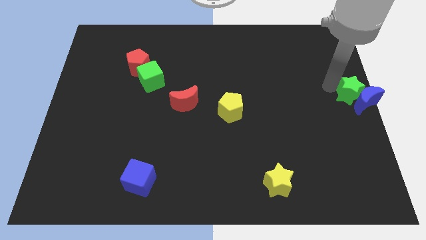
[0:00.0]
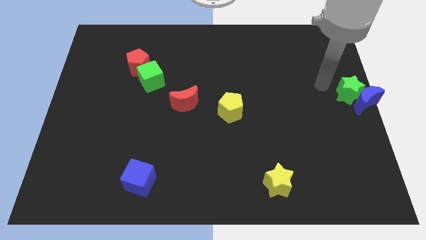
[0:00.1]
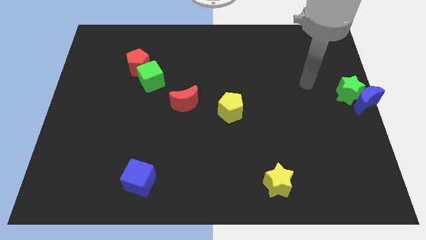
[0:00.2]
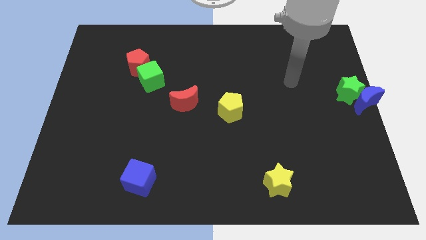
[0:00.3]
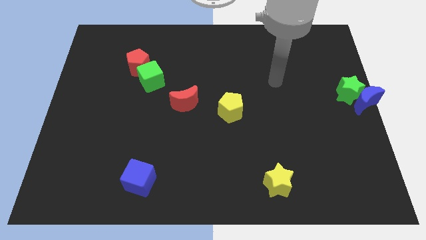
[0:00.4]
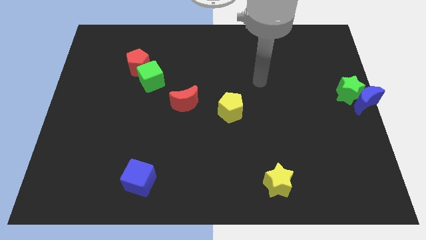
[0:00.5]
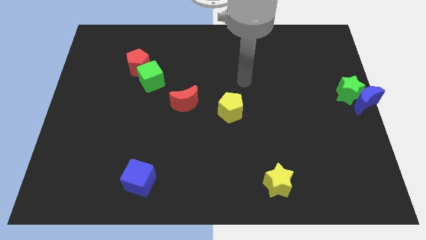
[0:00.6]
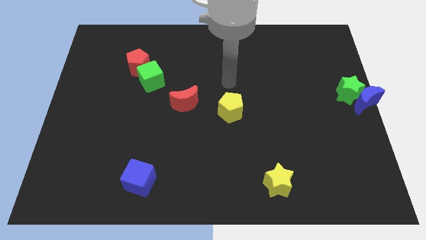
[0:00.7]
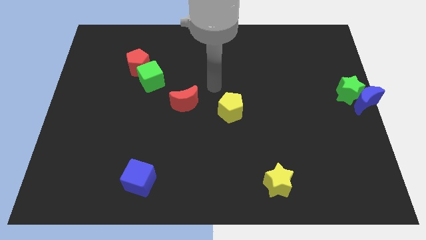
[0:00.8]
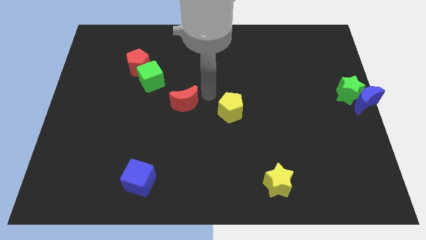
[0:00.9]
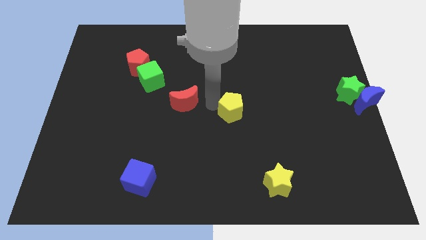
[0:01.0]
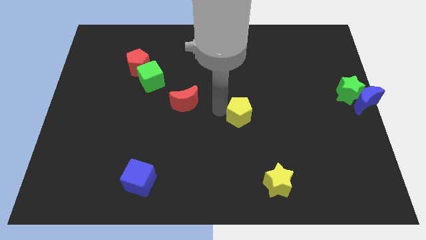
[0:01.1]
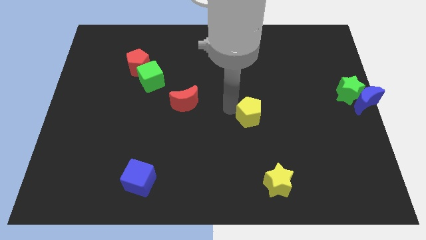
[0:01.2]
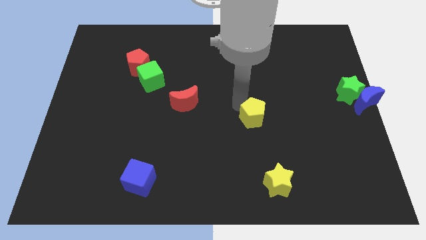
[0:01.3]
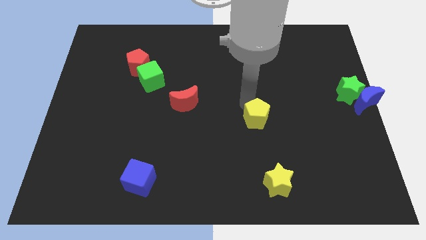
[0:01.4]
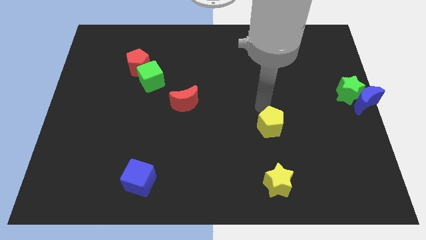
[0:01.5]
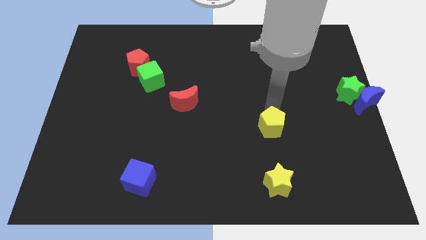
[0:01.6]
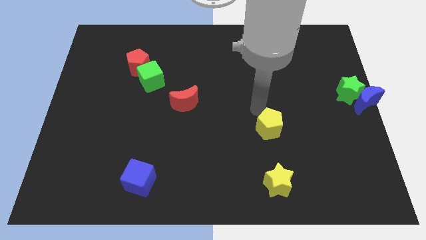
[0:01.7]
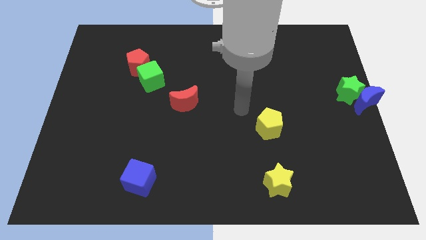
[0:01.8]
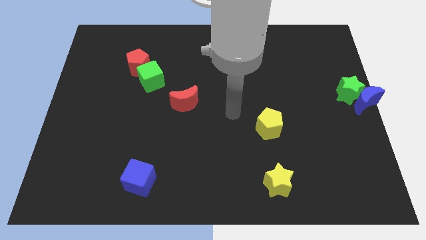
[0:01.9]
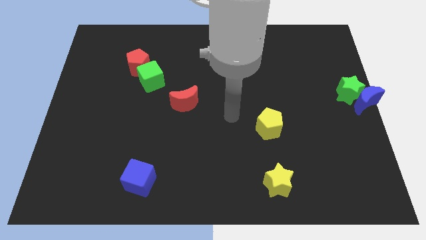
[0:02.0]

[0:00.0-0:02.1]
move the yellow pentagon on top of yellow star

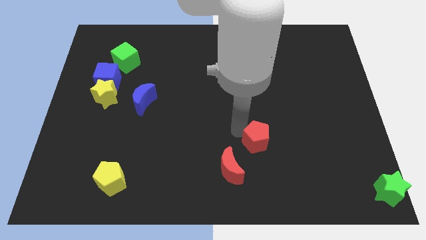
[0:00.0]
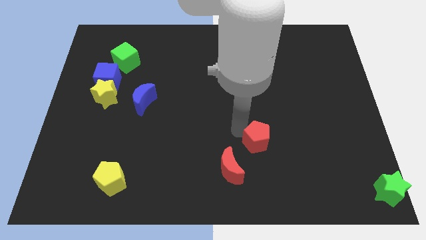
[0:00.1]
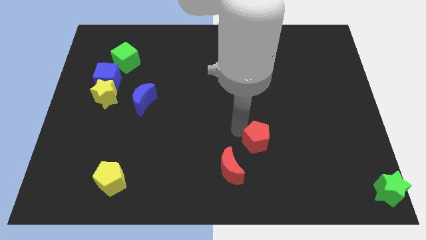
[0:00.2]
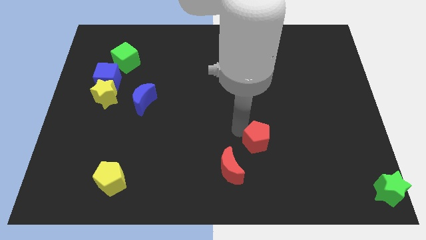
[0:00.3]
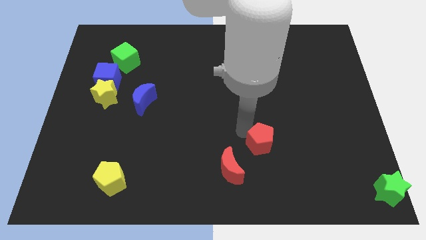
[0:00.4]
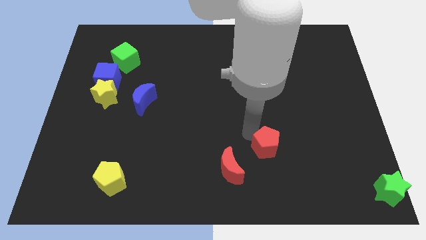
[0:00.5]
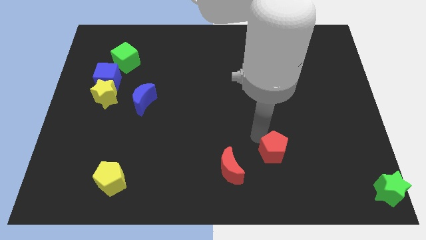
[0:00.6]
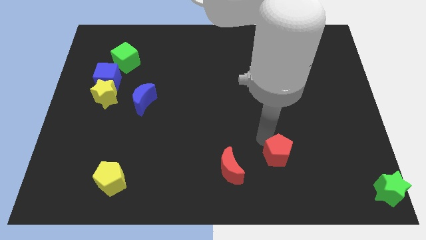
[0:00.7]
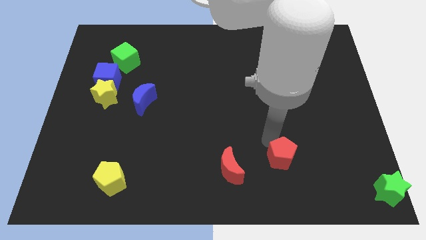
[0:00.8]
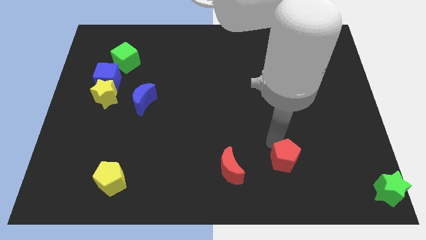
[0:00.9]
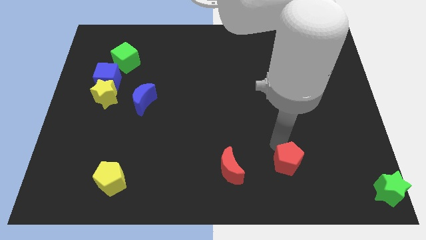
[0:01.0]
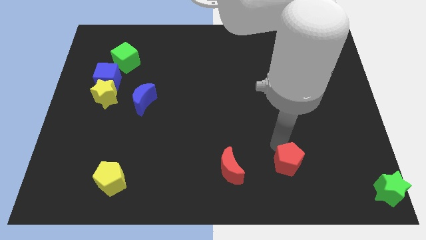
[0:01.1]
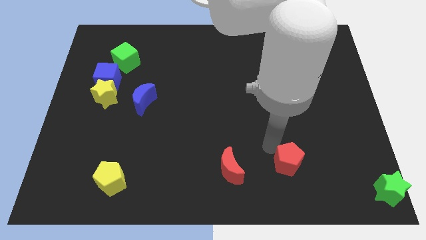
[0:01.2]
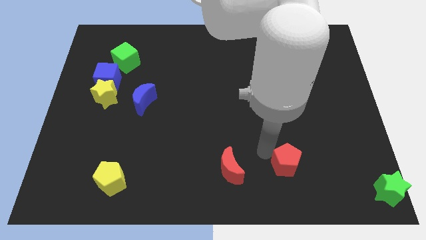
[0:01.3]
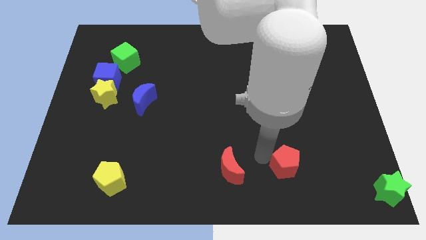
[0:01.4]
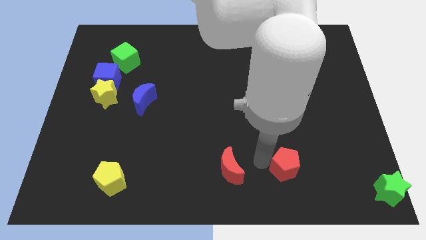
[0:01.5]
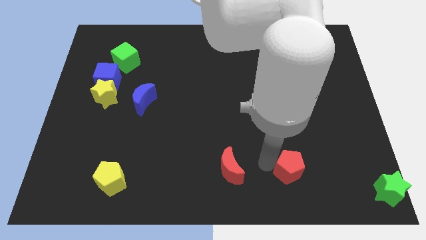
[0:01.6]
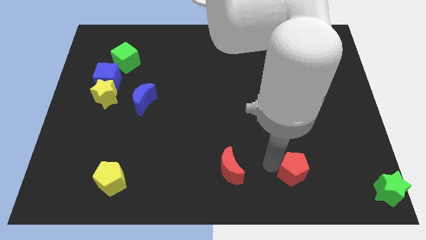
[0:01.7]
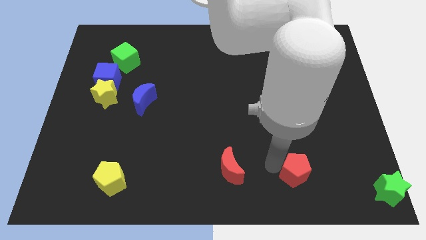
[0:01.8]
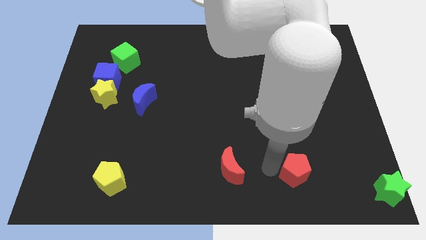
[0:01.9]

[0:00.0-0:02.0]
slide the red pentagon to the right side of the red crescent

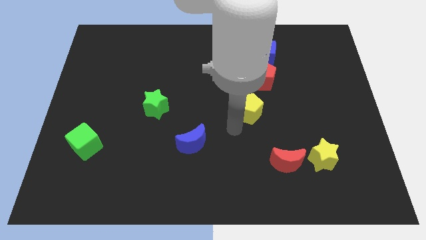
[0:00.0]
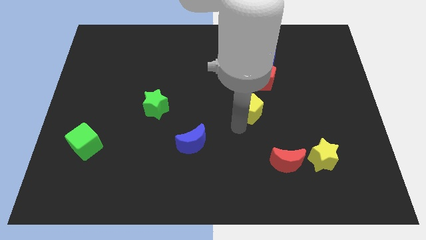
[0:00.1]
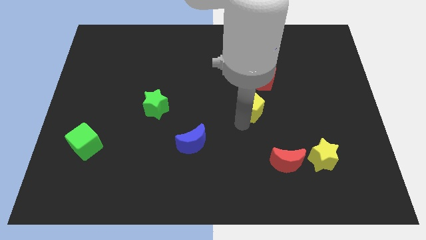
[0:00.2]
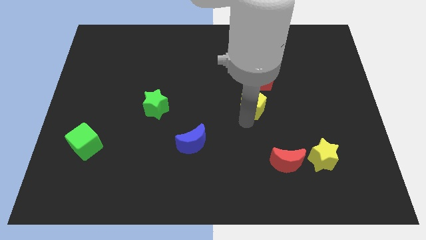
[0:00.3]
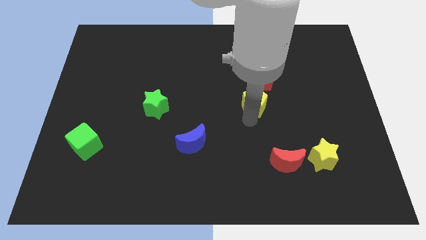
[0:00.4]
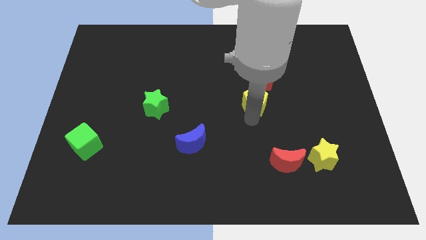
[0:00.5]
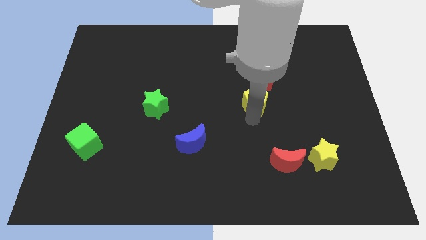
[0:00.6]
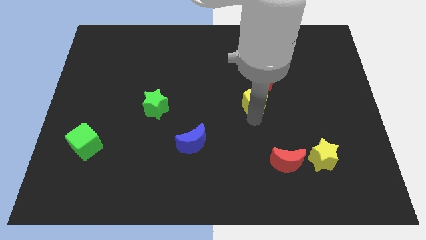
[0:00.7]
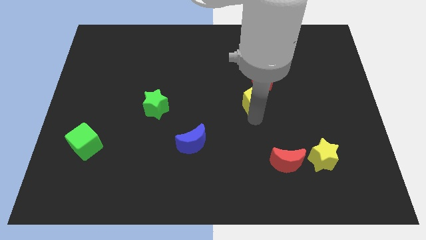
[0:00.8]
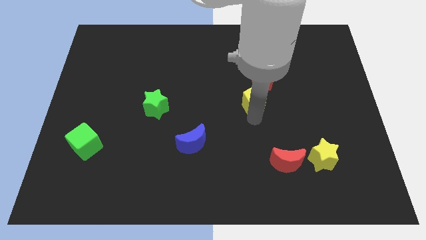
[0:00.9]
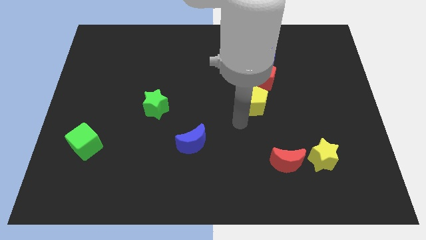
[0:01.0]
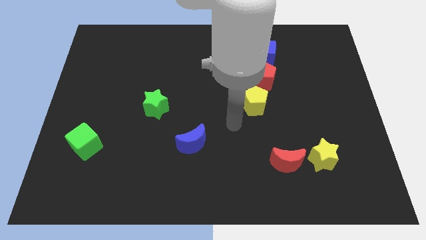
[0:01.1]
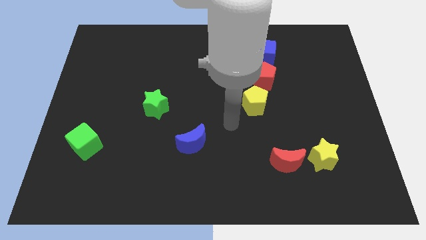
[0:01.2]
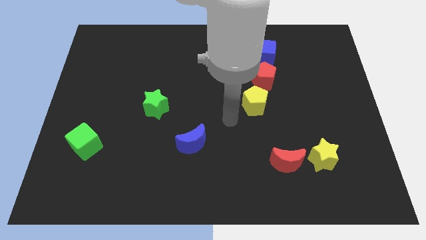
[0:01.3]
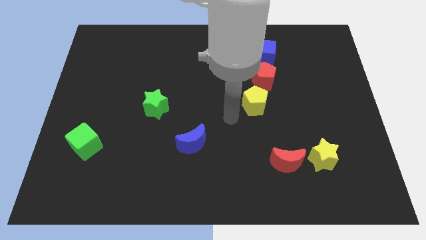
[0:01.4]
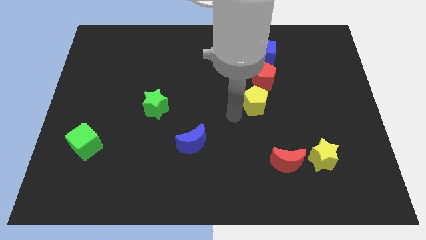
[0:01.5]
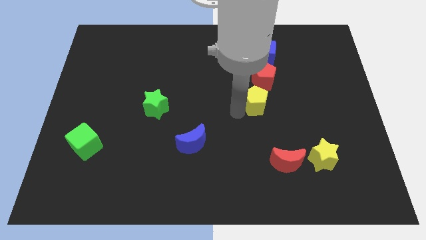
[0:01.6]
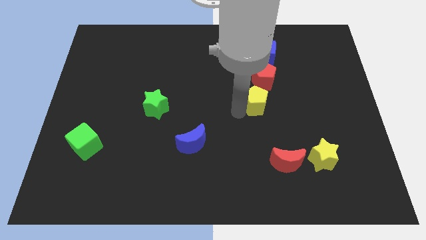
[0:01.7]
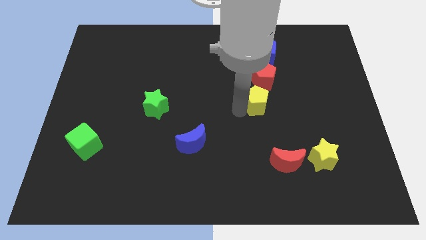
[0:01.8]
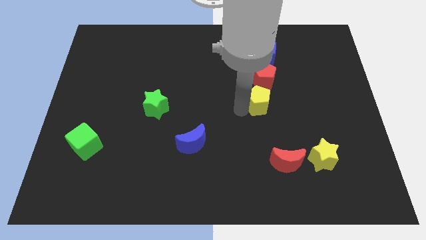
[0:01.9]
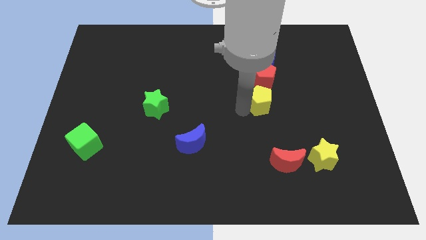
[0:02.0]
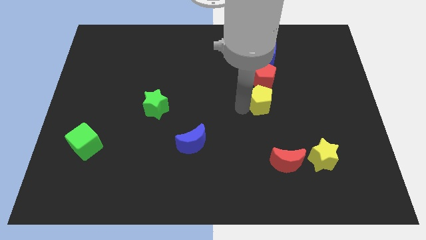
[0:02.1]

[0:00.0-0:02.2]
place yellow pentagon to the bottom of red pentagon

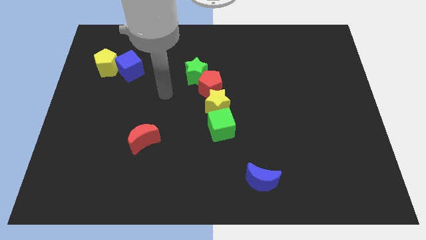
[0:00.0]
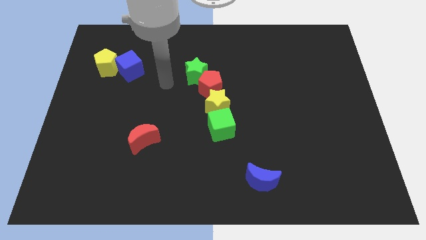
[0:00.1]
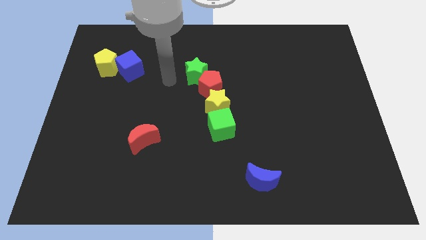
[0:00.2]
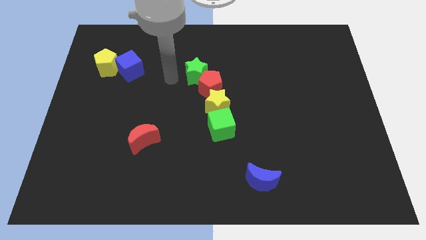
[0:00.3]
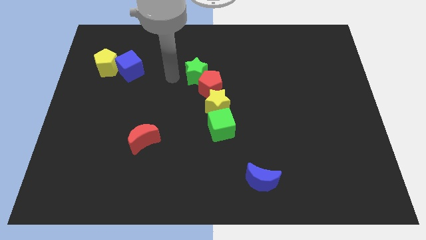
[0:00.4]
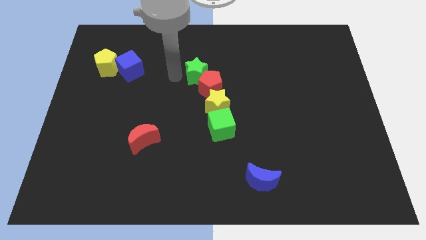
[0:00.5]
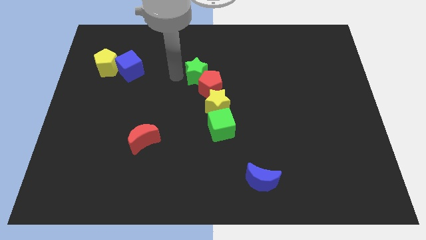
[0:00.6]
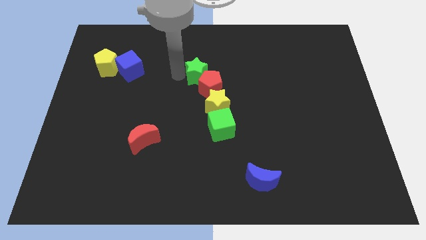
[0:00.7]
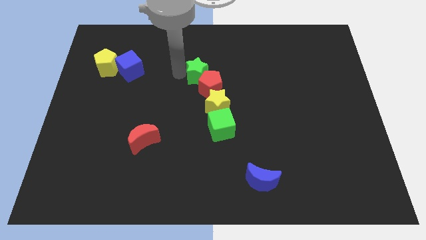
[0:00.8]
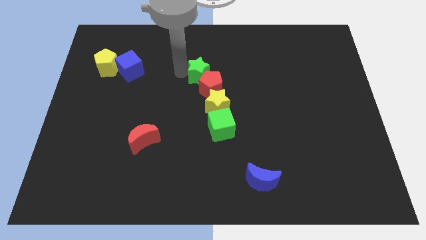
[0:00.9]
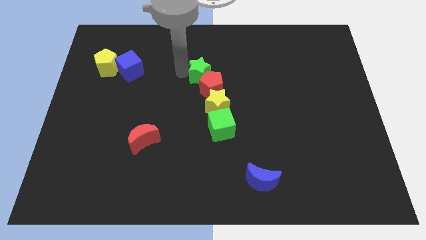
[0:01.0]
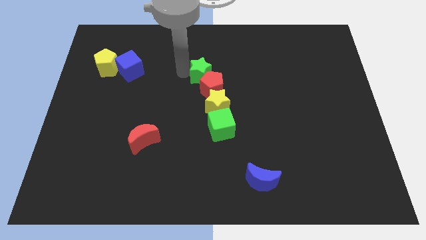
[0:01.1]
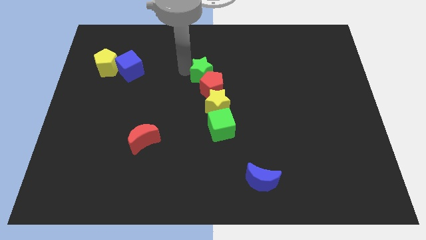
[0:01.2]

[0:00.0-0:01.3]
slightly move the green star to the right

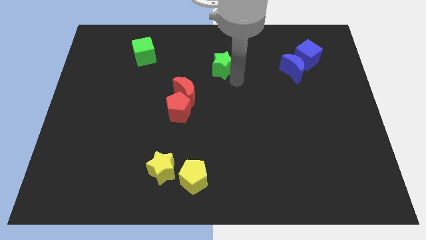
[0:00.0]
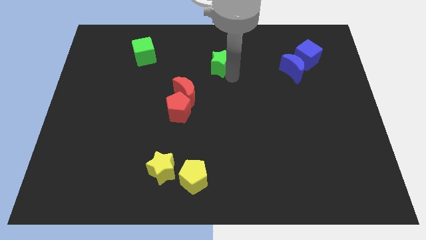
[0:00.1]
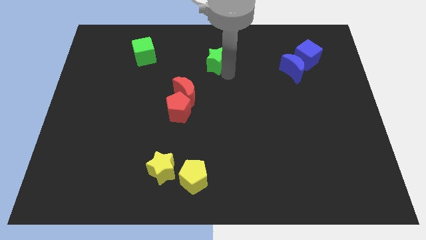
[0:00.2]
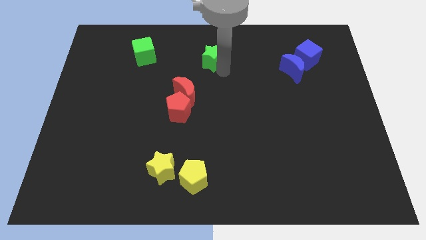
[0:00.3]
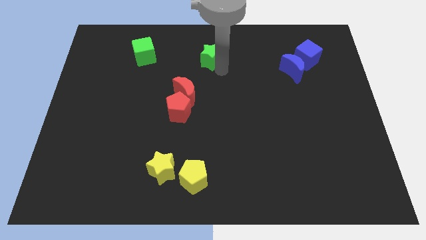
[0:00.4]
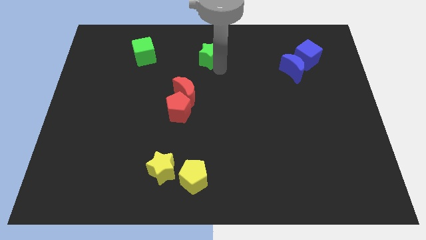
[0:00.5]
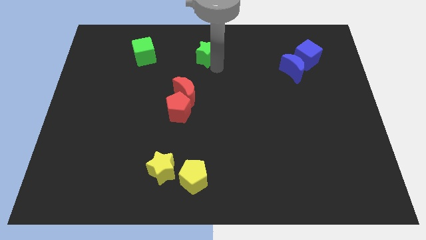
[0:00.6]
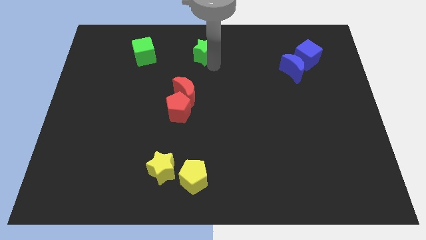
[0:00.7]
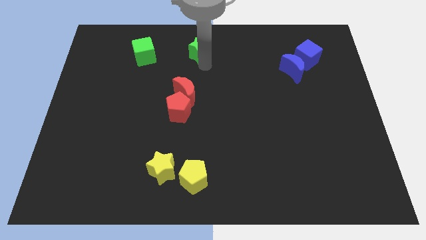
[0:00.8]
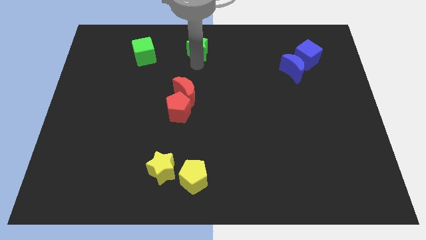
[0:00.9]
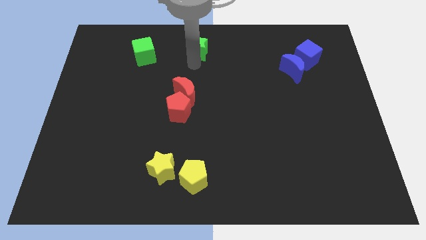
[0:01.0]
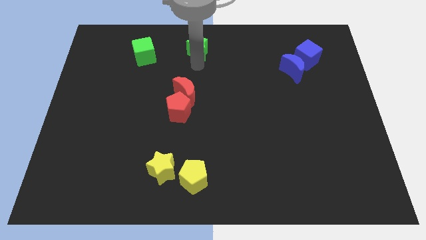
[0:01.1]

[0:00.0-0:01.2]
push the green star towards the center top of the board

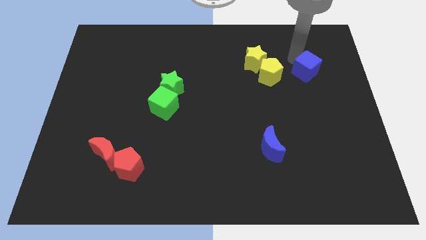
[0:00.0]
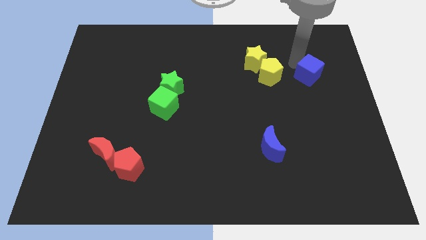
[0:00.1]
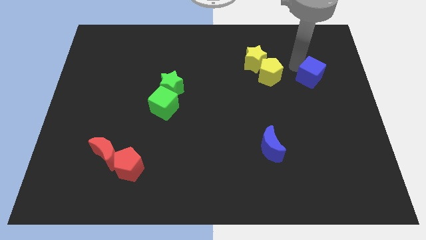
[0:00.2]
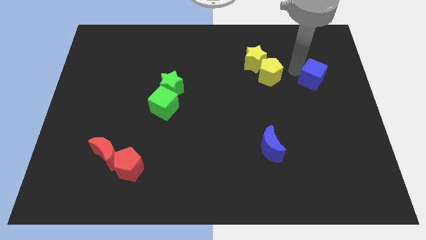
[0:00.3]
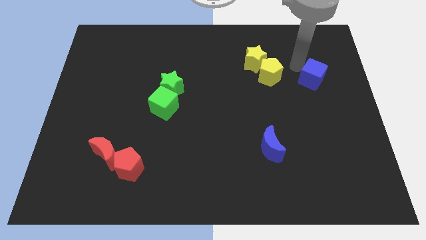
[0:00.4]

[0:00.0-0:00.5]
move the blue cube to the right of the yellow pentagon
